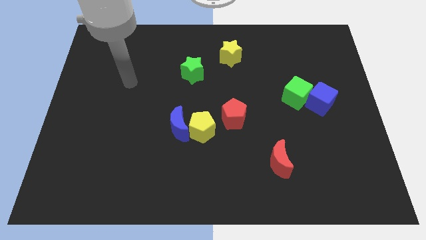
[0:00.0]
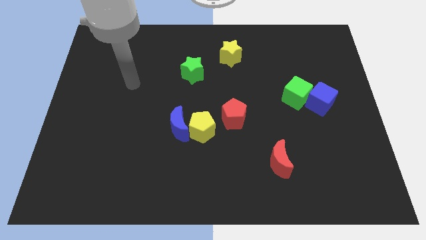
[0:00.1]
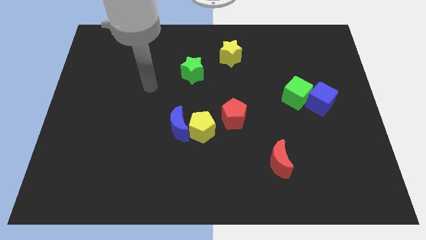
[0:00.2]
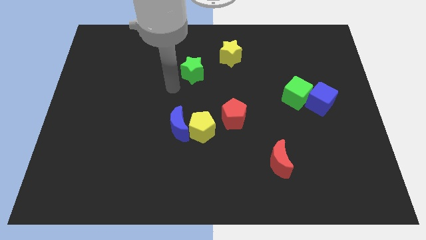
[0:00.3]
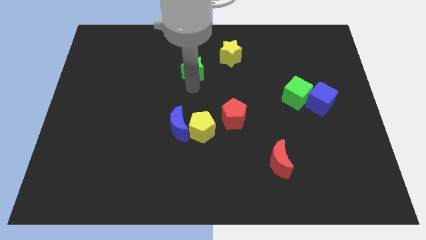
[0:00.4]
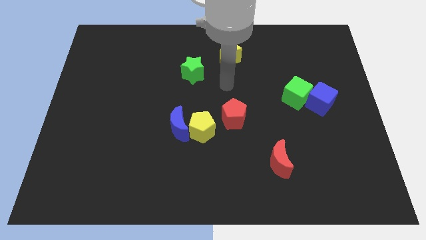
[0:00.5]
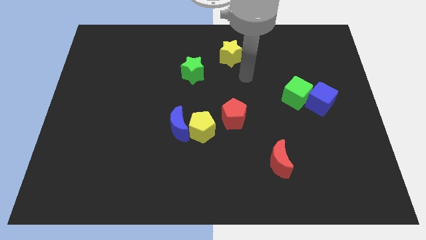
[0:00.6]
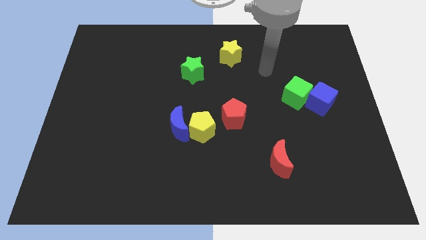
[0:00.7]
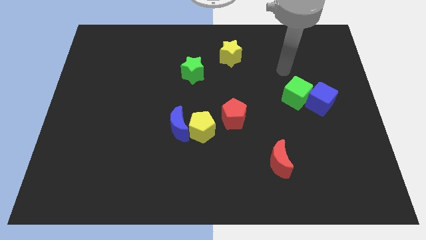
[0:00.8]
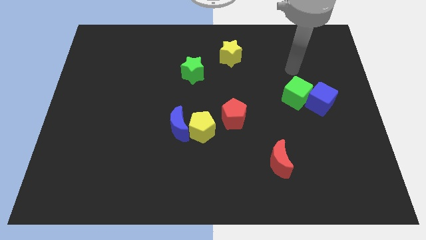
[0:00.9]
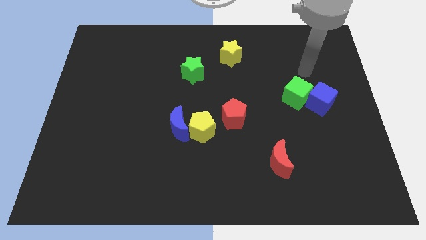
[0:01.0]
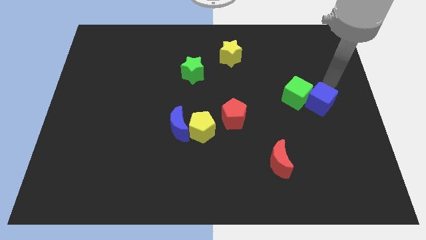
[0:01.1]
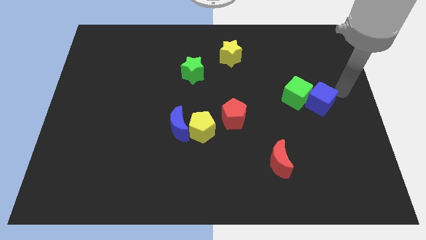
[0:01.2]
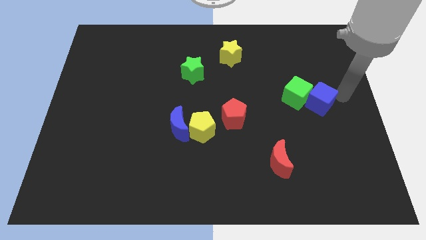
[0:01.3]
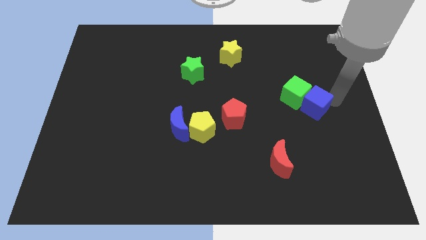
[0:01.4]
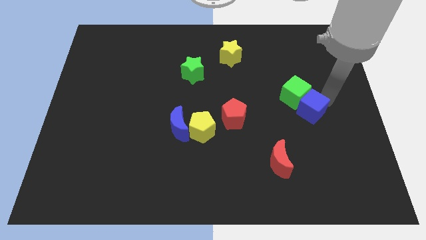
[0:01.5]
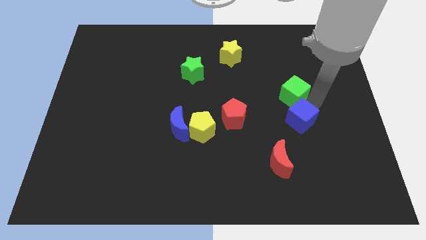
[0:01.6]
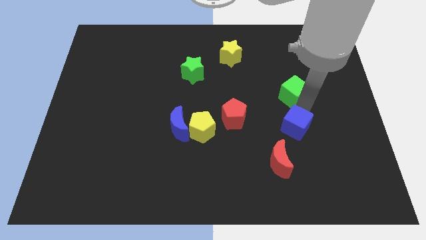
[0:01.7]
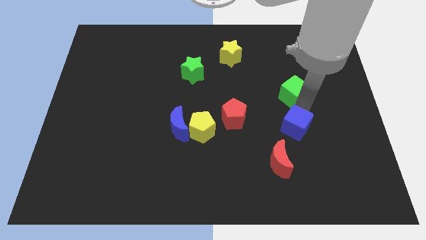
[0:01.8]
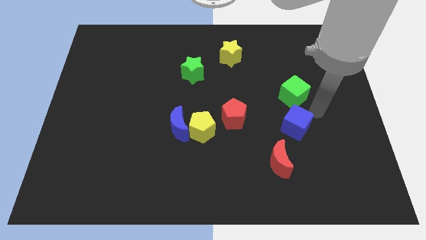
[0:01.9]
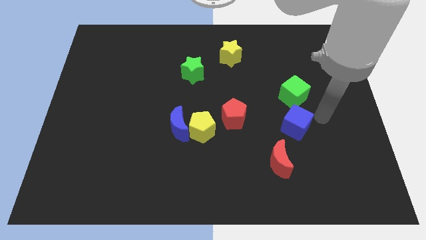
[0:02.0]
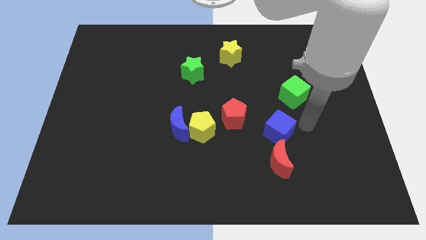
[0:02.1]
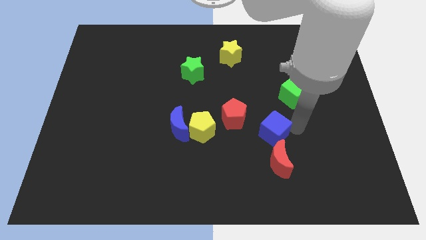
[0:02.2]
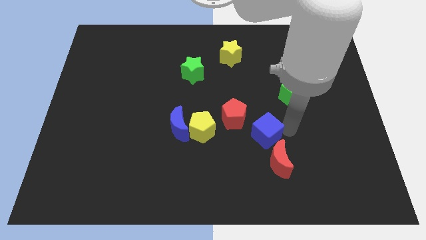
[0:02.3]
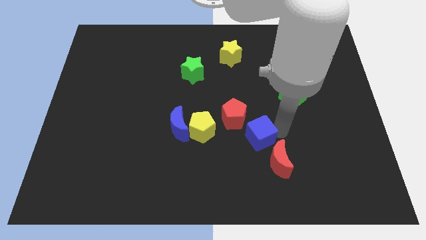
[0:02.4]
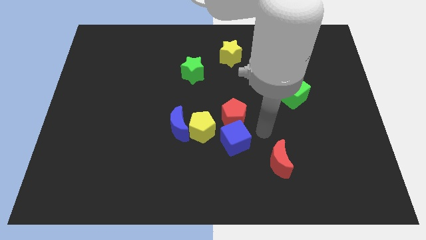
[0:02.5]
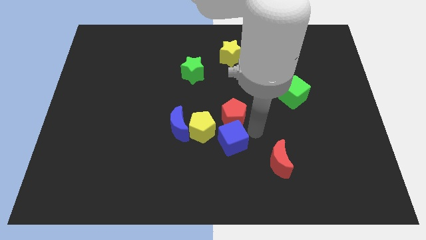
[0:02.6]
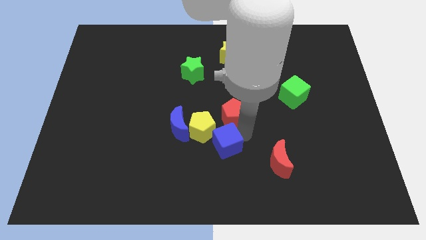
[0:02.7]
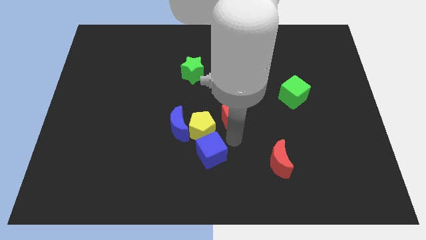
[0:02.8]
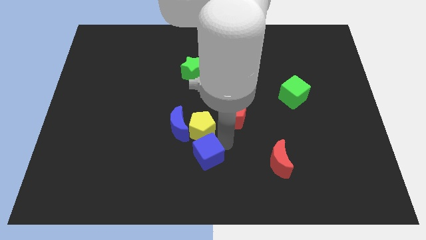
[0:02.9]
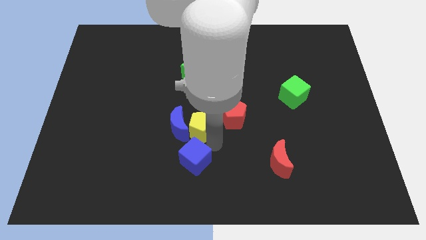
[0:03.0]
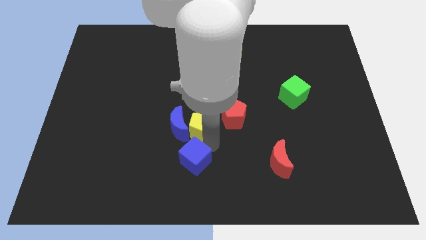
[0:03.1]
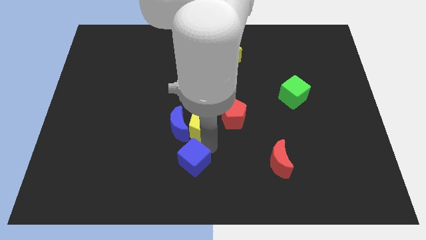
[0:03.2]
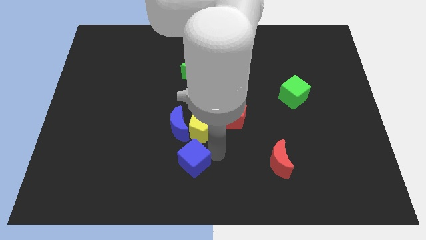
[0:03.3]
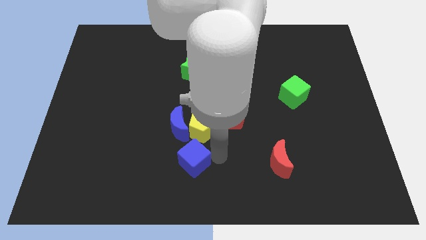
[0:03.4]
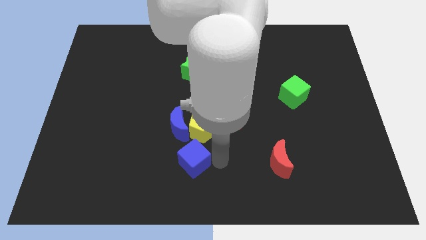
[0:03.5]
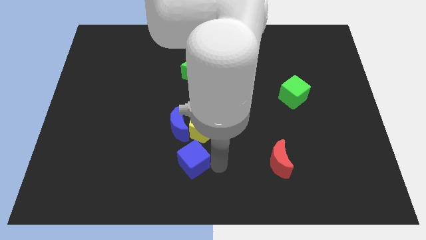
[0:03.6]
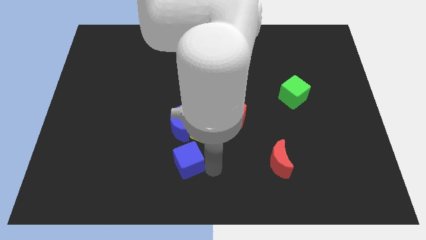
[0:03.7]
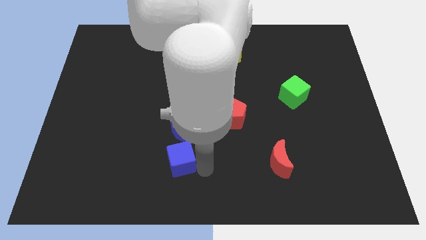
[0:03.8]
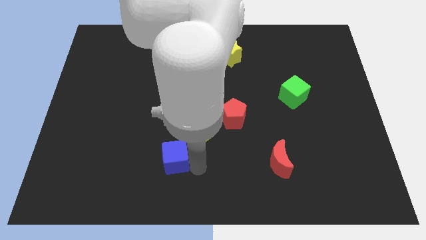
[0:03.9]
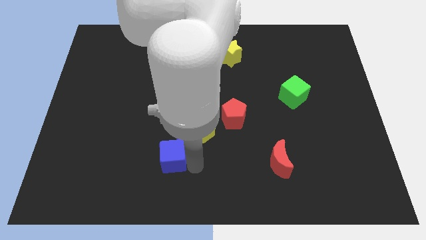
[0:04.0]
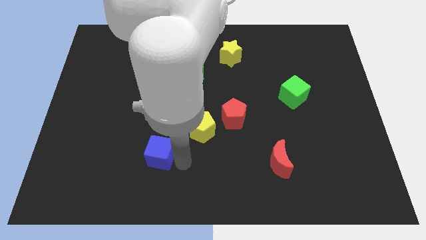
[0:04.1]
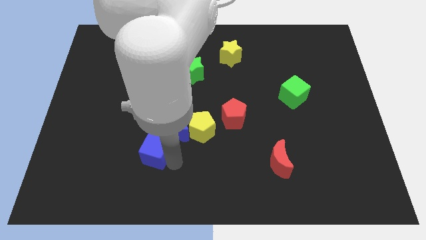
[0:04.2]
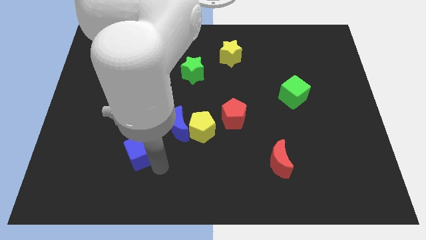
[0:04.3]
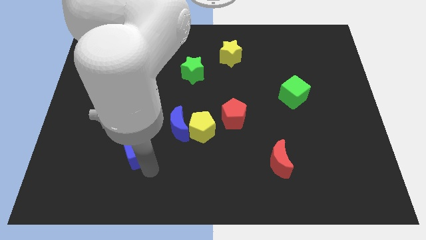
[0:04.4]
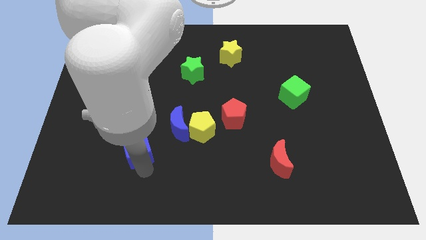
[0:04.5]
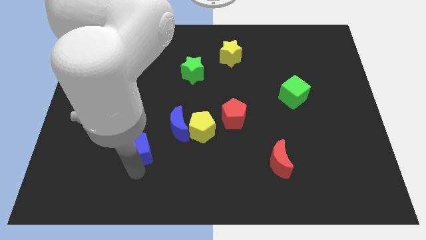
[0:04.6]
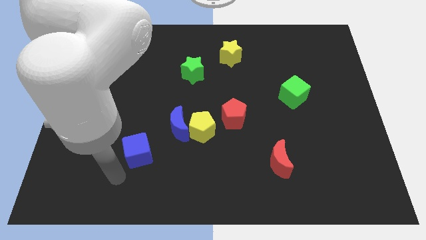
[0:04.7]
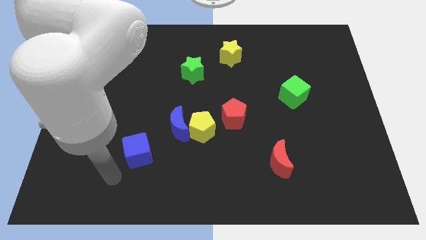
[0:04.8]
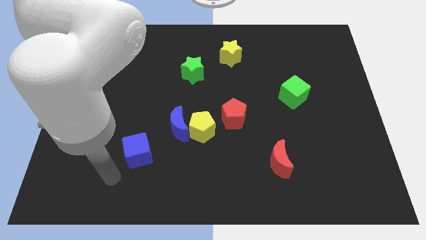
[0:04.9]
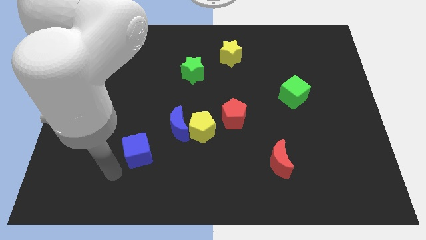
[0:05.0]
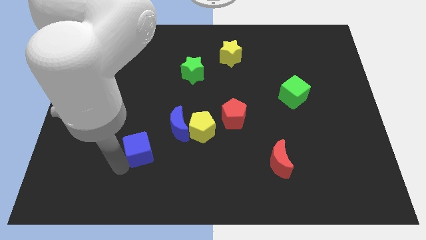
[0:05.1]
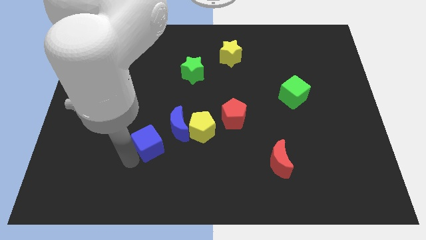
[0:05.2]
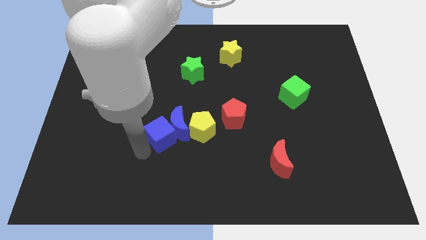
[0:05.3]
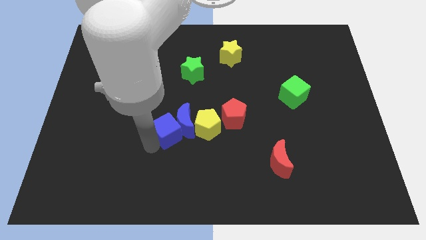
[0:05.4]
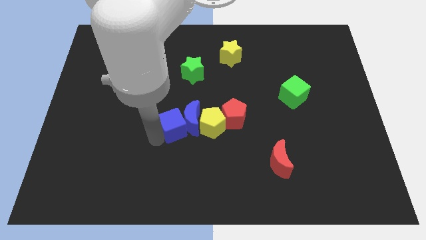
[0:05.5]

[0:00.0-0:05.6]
move the blue cube towards the blue moon

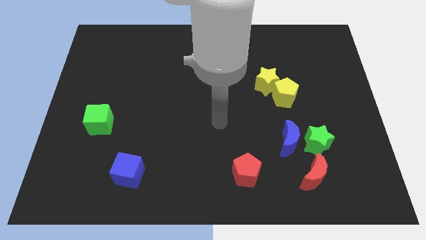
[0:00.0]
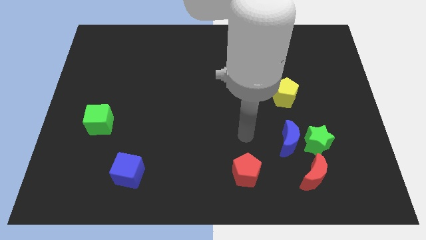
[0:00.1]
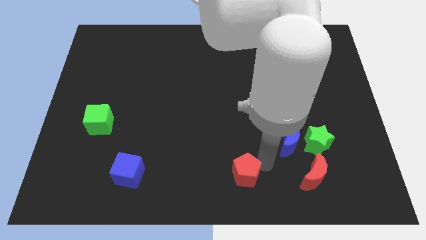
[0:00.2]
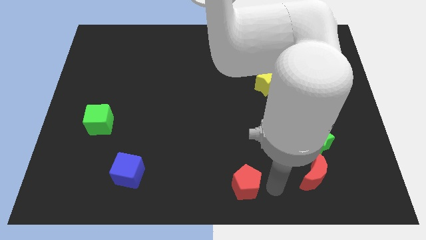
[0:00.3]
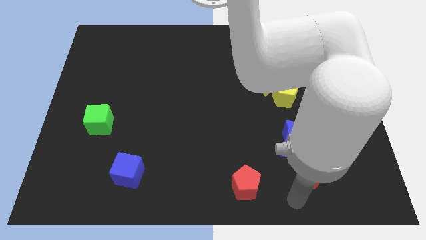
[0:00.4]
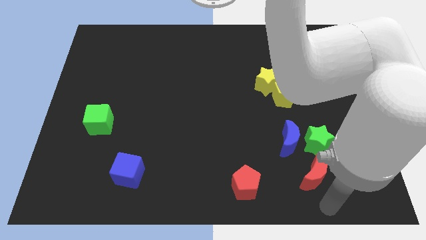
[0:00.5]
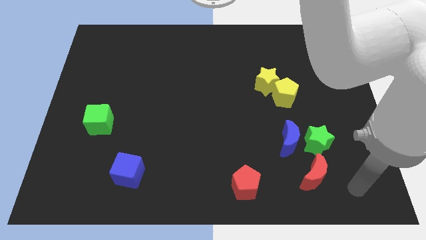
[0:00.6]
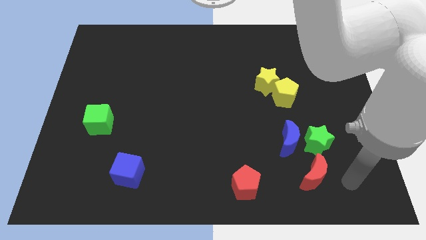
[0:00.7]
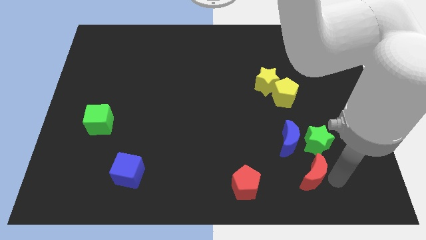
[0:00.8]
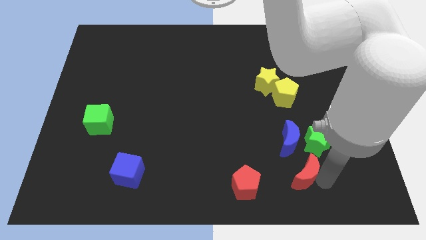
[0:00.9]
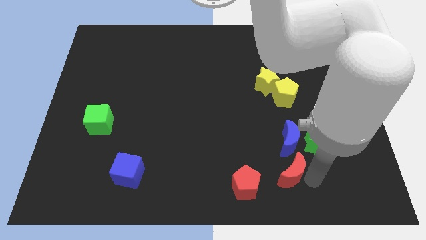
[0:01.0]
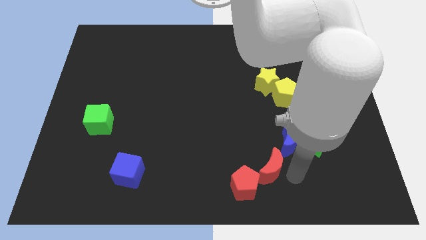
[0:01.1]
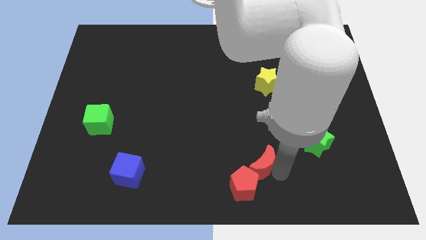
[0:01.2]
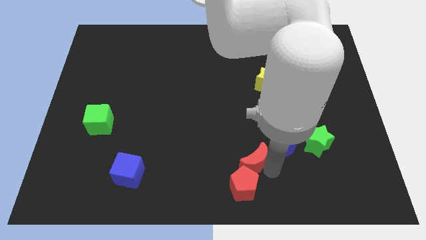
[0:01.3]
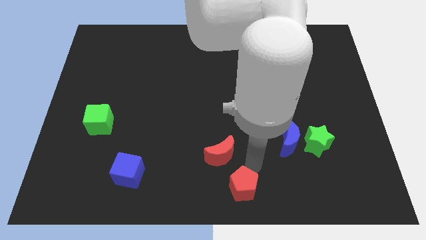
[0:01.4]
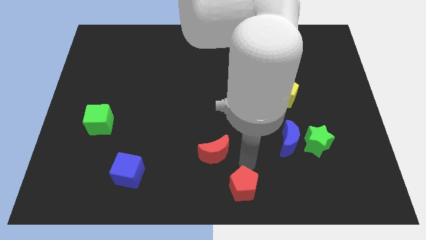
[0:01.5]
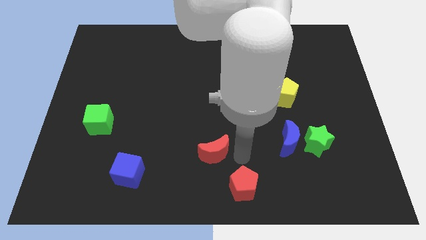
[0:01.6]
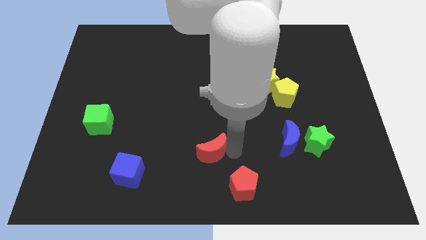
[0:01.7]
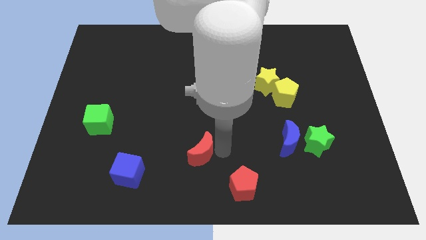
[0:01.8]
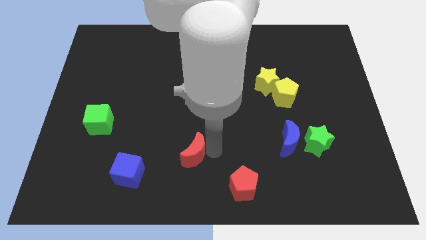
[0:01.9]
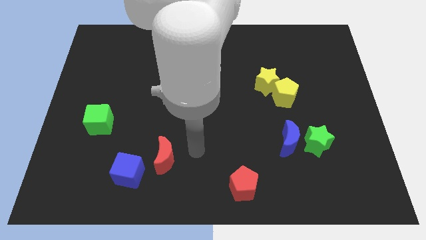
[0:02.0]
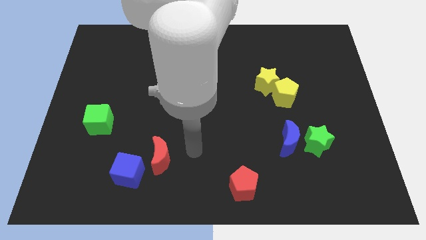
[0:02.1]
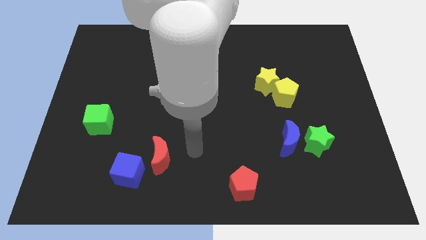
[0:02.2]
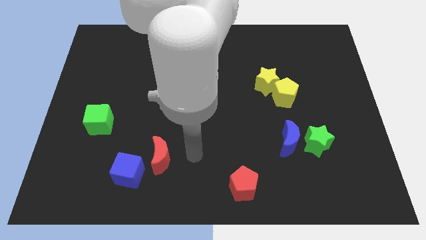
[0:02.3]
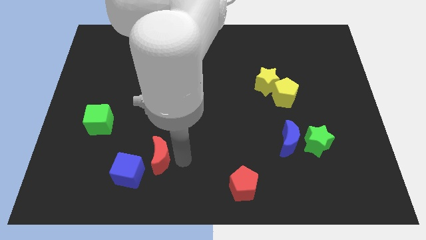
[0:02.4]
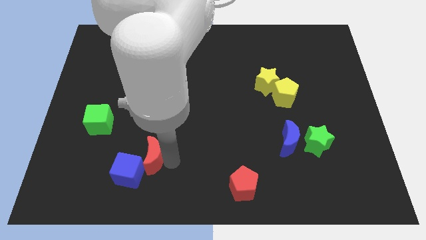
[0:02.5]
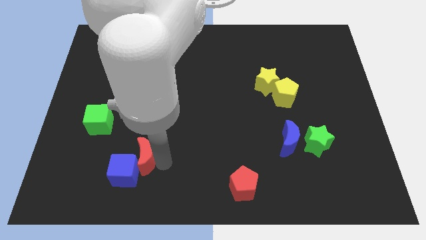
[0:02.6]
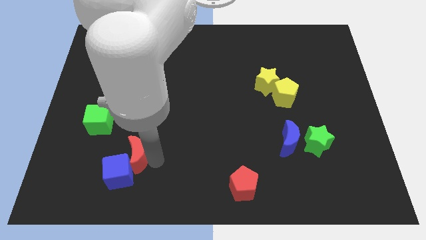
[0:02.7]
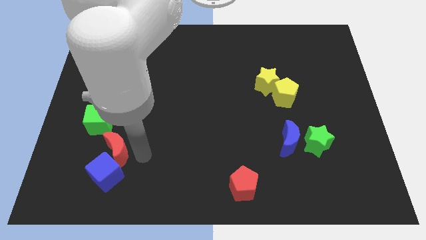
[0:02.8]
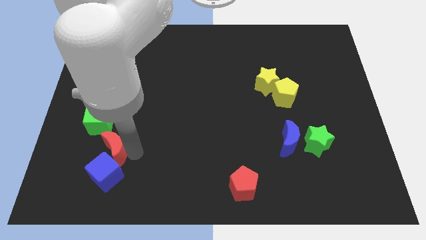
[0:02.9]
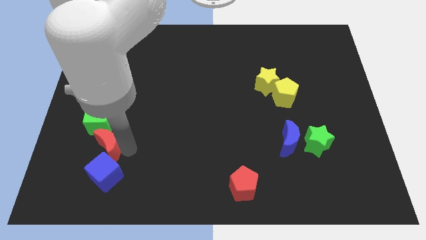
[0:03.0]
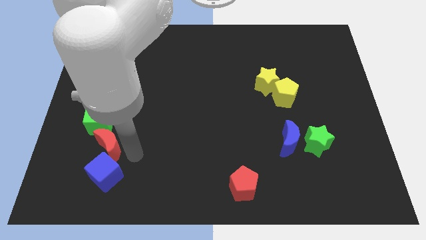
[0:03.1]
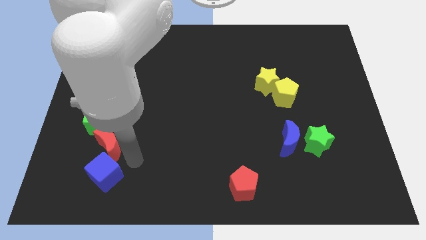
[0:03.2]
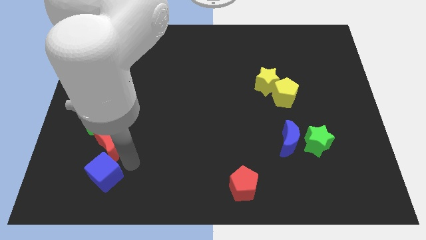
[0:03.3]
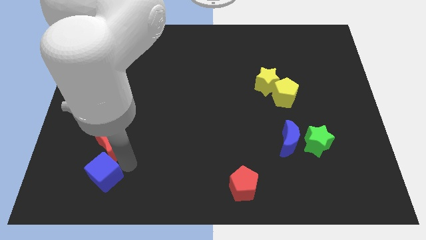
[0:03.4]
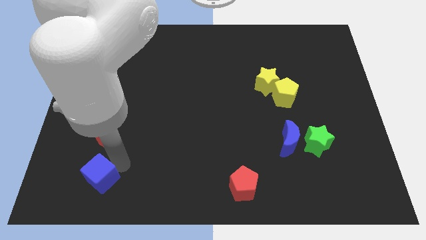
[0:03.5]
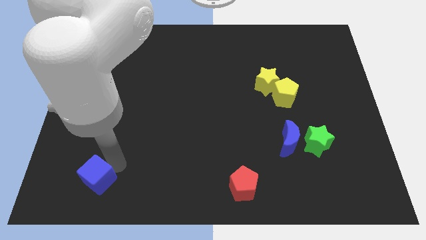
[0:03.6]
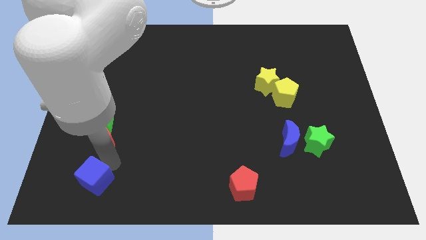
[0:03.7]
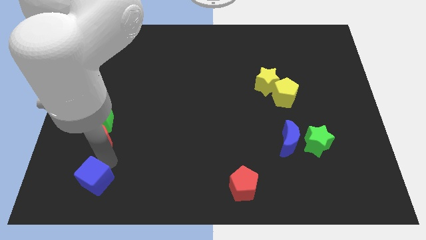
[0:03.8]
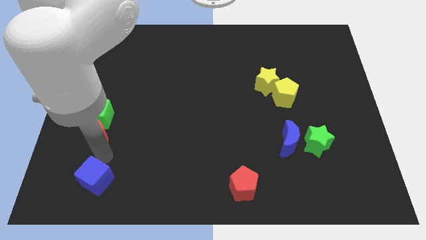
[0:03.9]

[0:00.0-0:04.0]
put the red moon close to the green cube
